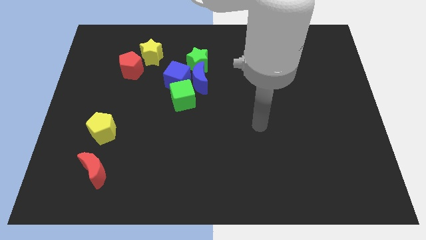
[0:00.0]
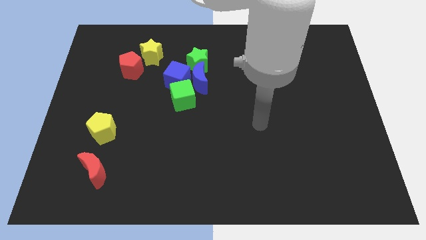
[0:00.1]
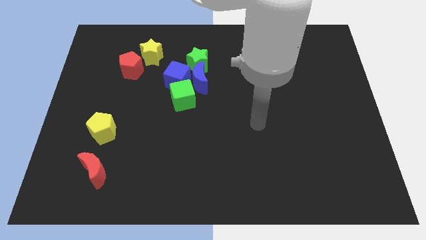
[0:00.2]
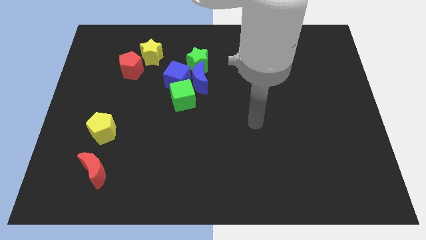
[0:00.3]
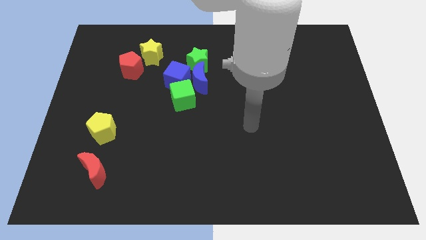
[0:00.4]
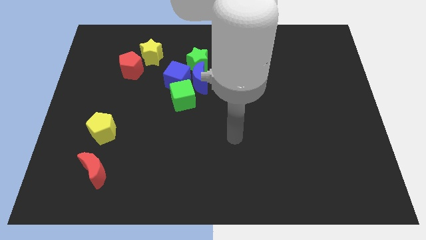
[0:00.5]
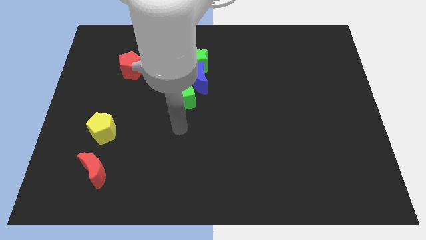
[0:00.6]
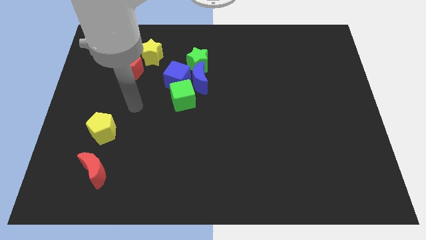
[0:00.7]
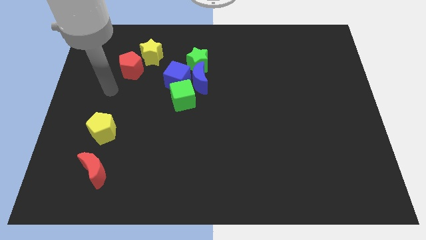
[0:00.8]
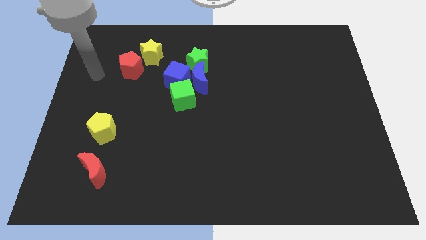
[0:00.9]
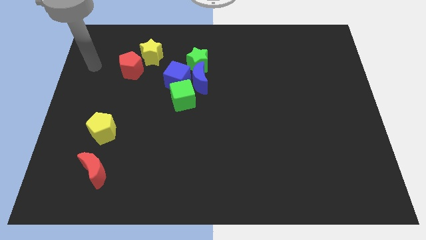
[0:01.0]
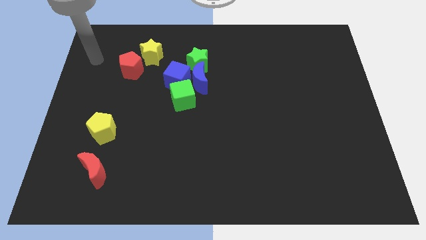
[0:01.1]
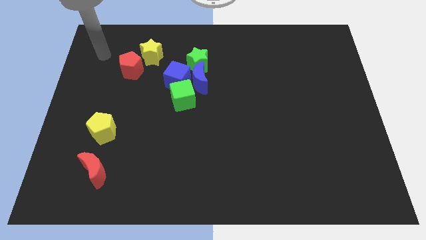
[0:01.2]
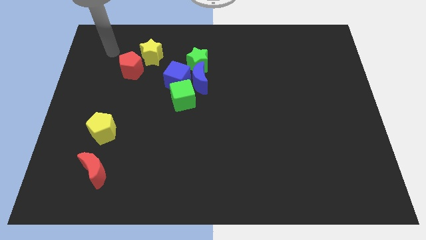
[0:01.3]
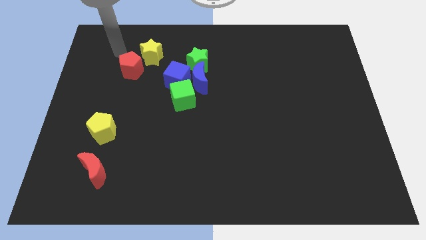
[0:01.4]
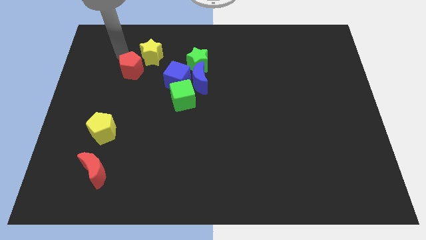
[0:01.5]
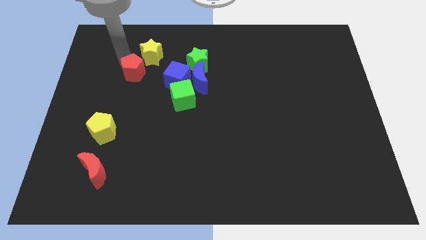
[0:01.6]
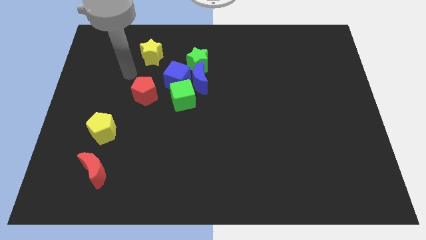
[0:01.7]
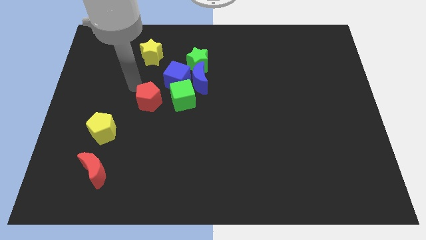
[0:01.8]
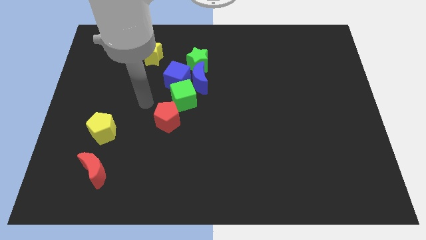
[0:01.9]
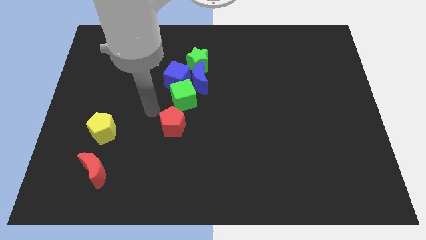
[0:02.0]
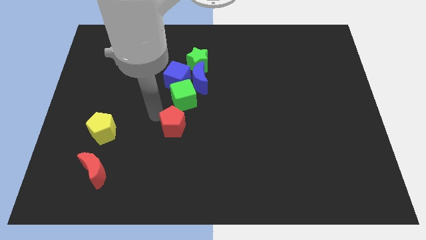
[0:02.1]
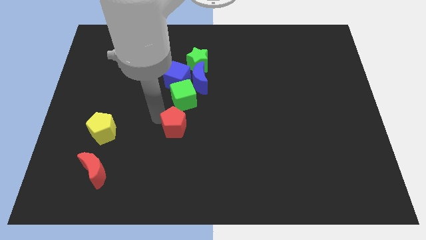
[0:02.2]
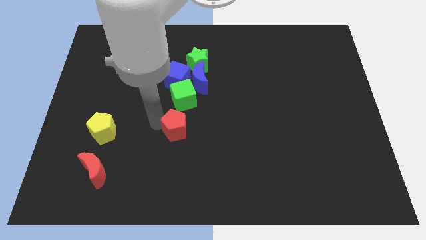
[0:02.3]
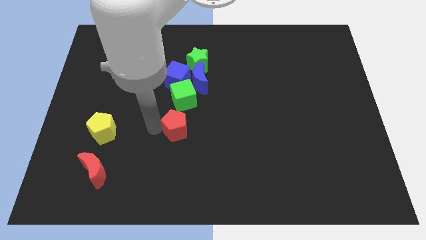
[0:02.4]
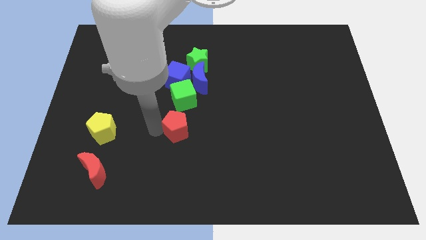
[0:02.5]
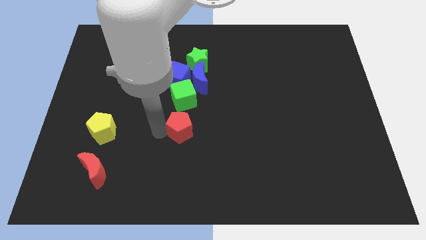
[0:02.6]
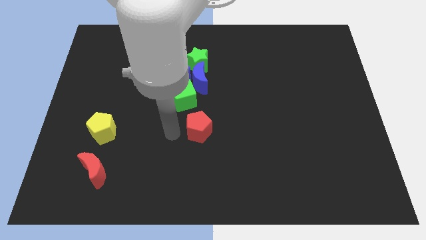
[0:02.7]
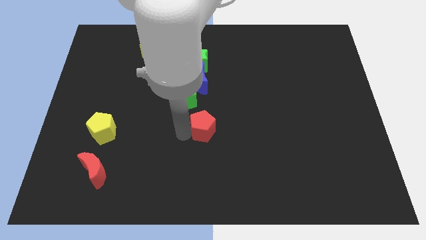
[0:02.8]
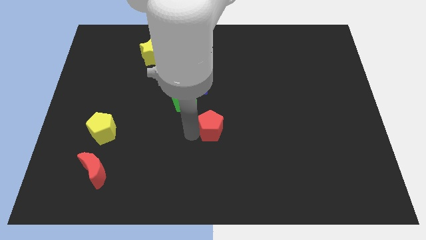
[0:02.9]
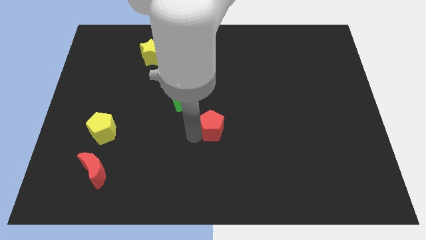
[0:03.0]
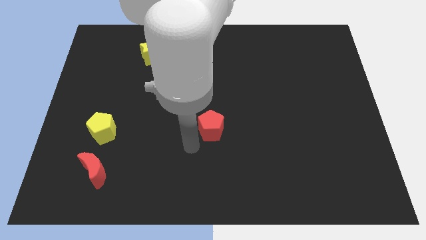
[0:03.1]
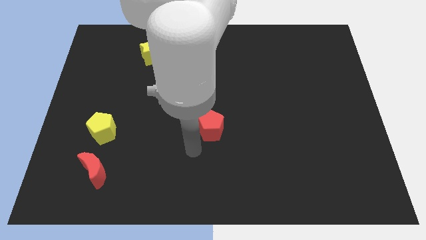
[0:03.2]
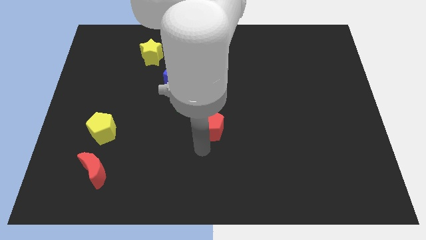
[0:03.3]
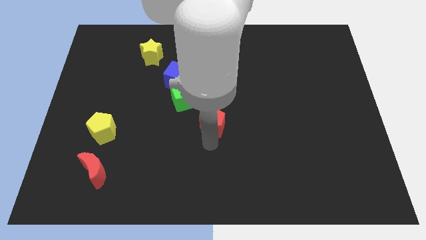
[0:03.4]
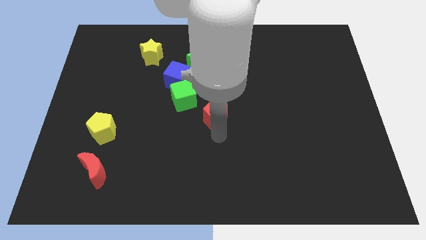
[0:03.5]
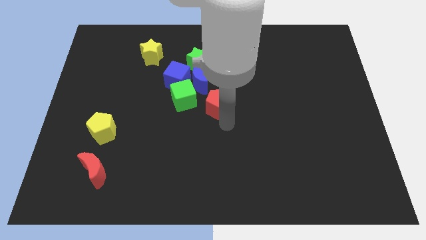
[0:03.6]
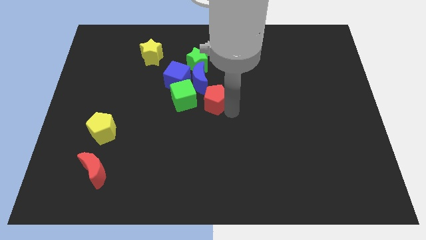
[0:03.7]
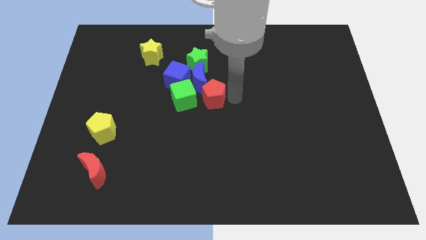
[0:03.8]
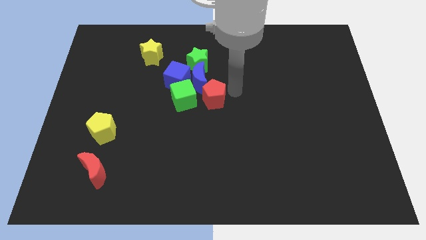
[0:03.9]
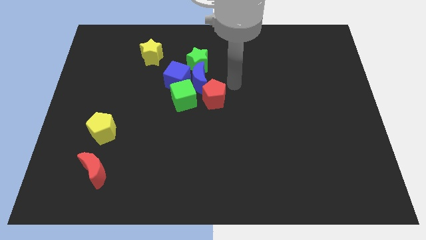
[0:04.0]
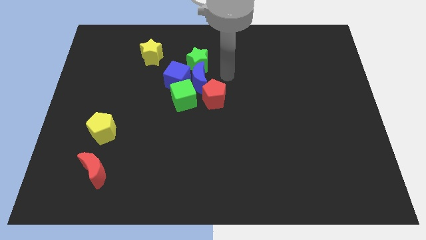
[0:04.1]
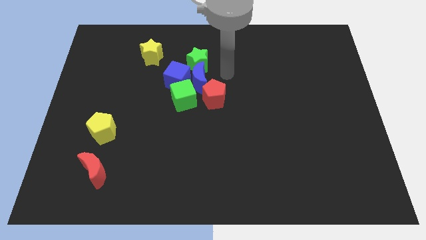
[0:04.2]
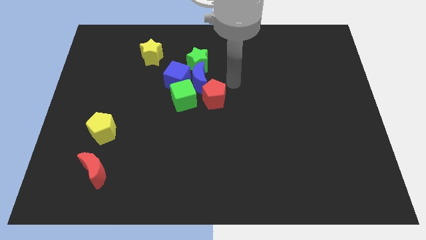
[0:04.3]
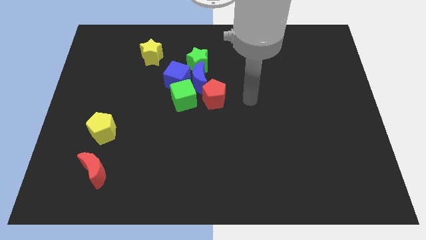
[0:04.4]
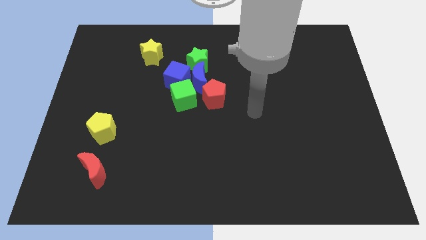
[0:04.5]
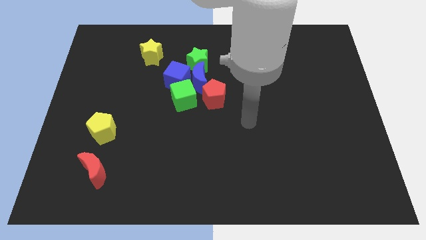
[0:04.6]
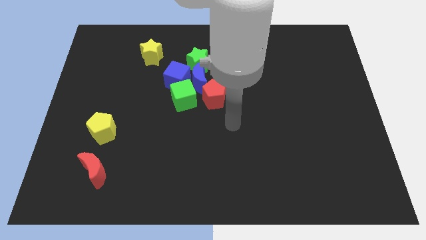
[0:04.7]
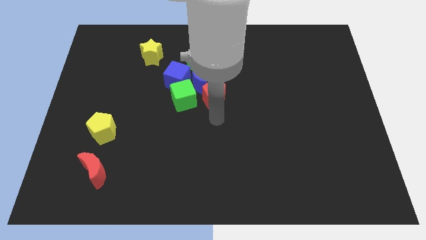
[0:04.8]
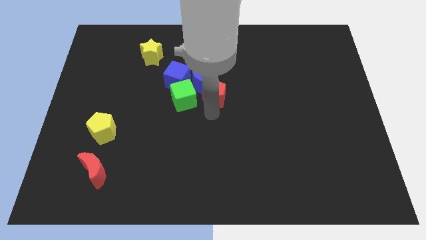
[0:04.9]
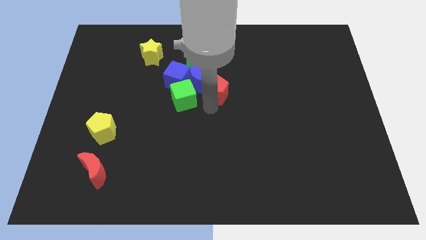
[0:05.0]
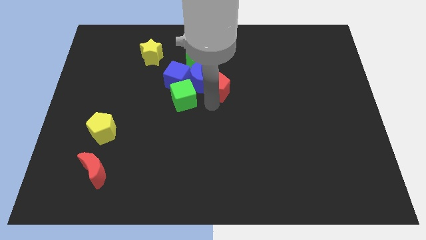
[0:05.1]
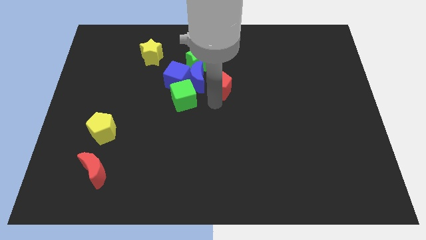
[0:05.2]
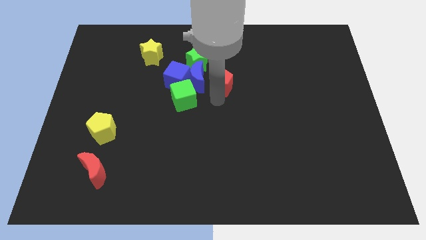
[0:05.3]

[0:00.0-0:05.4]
slide the red pentagon to the blue moon

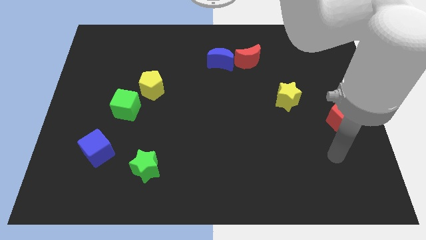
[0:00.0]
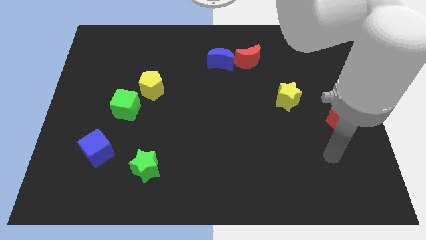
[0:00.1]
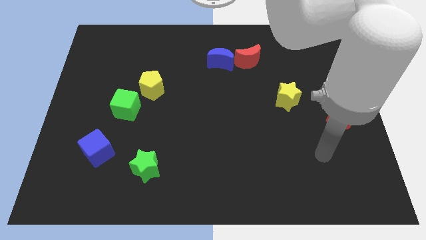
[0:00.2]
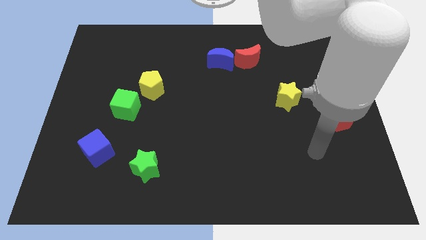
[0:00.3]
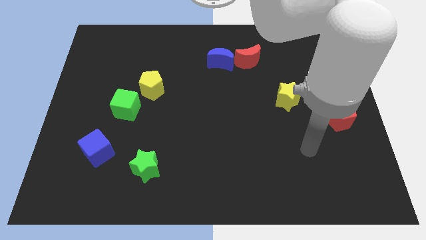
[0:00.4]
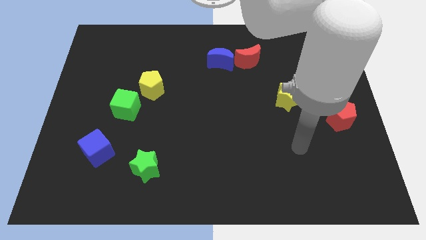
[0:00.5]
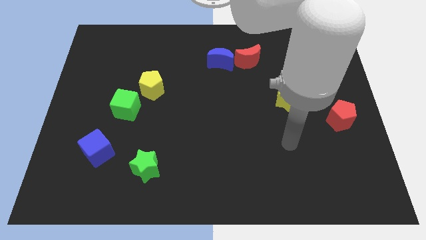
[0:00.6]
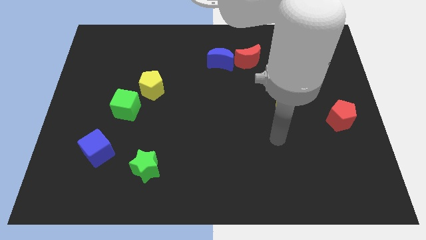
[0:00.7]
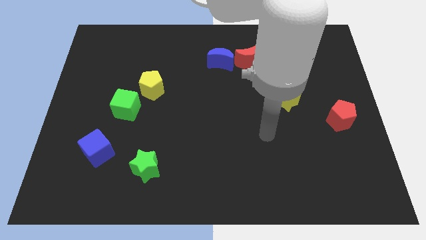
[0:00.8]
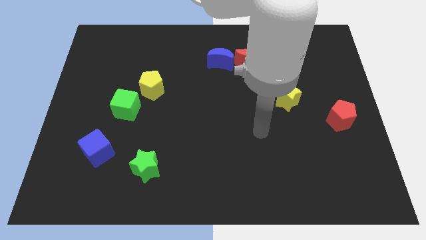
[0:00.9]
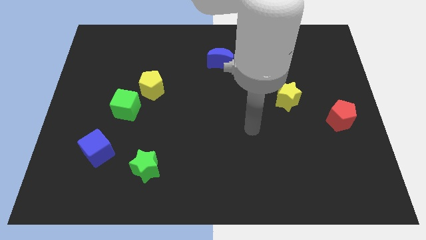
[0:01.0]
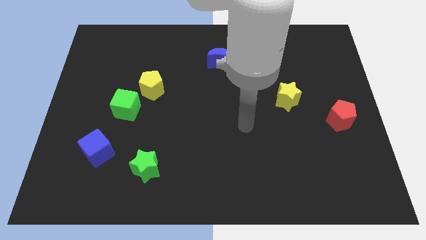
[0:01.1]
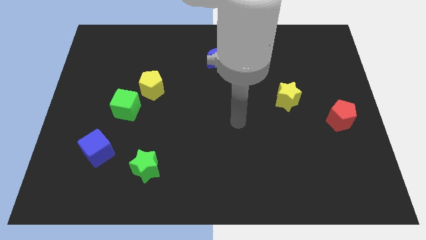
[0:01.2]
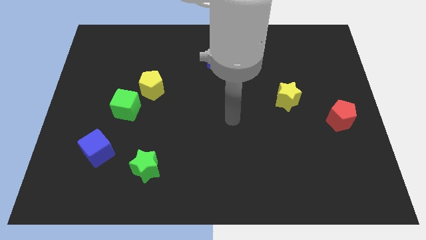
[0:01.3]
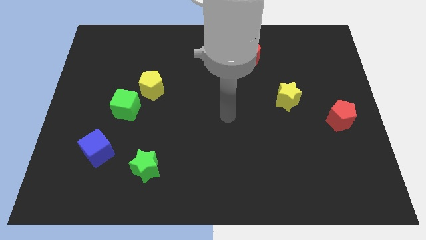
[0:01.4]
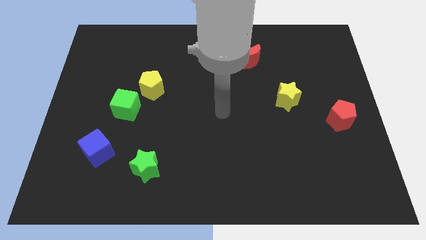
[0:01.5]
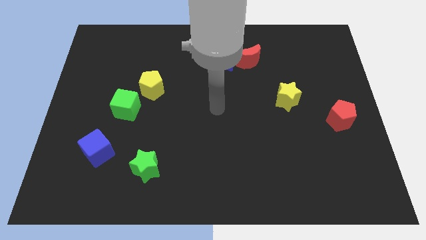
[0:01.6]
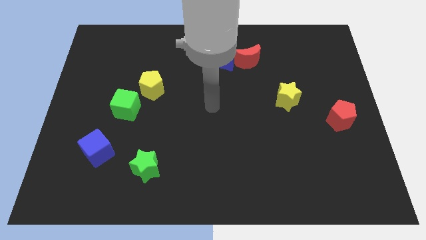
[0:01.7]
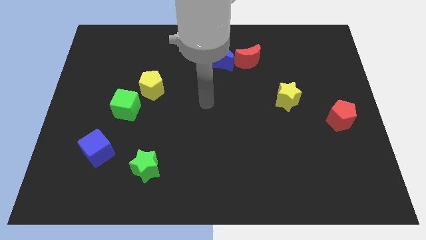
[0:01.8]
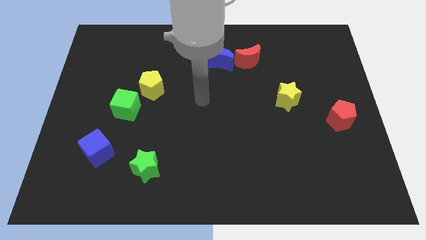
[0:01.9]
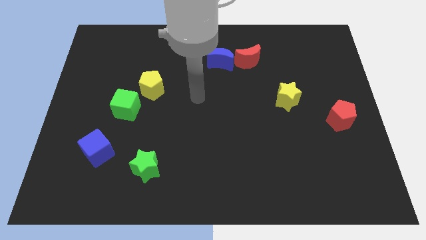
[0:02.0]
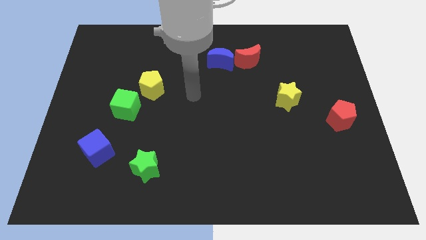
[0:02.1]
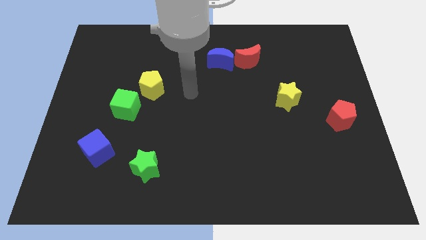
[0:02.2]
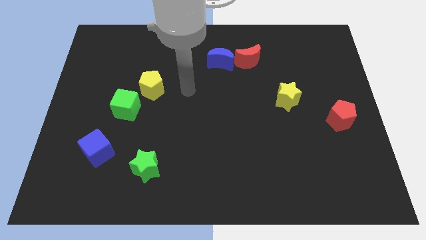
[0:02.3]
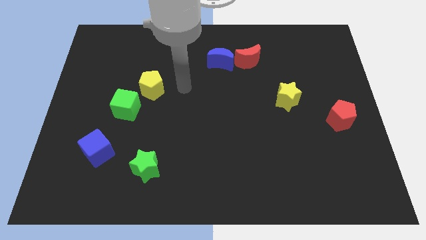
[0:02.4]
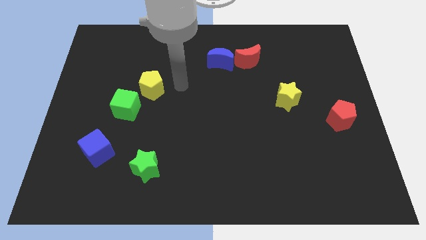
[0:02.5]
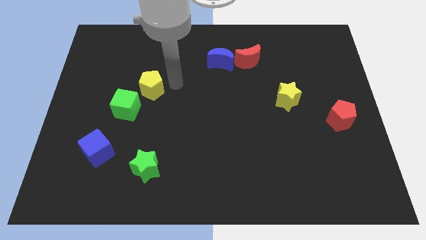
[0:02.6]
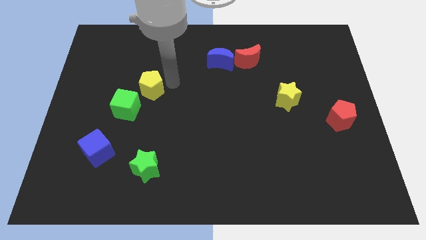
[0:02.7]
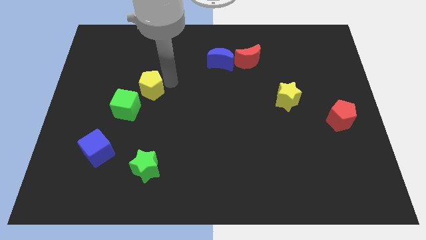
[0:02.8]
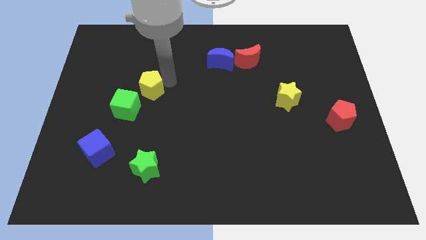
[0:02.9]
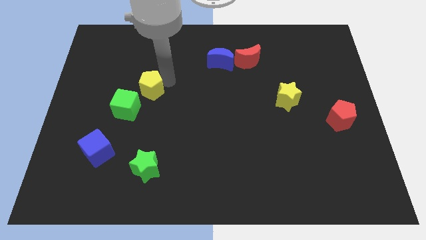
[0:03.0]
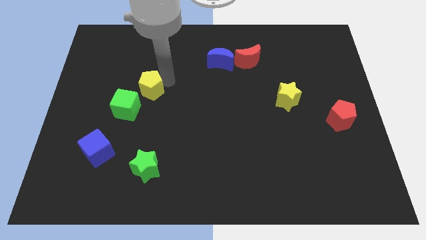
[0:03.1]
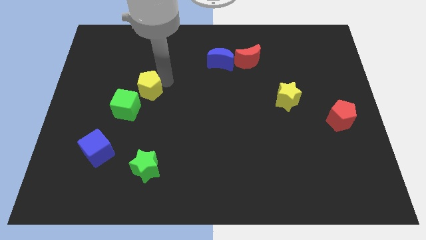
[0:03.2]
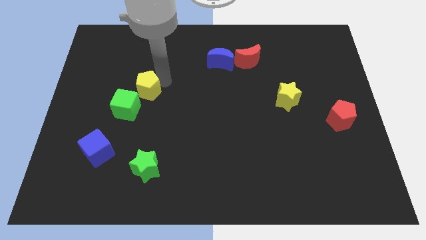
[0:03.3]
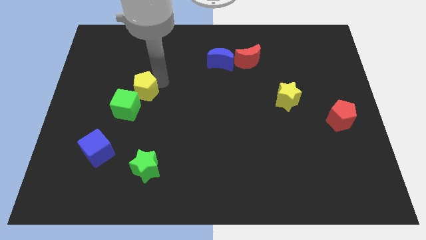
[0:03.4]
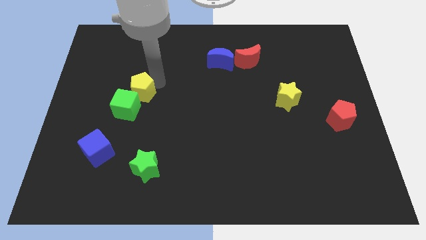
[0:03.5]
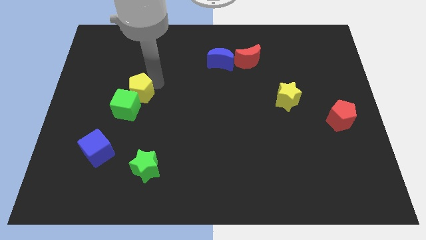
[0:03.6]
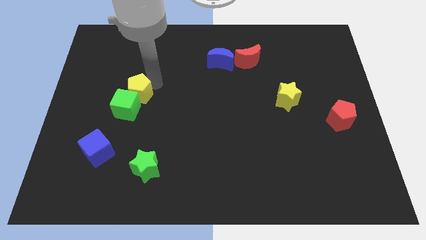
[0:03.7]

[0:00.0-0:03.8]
push the yellow pentagon next to the green cube
